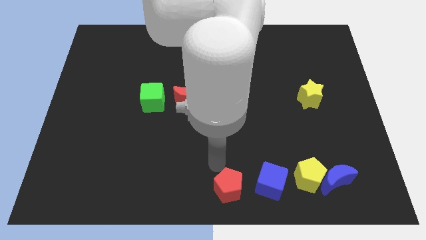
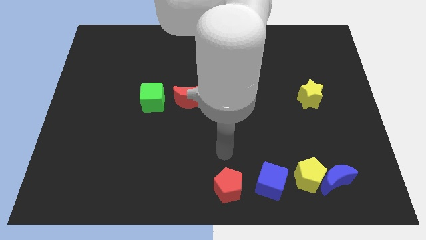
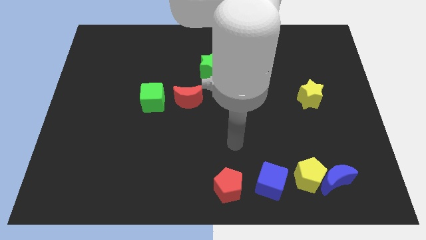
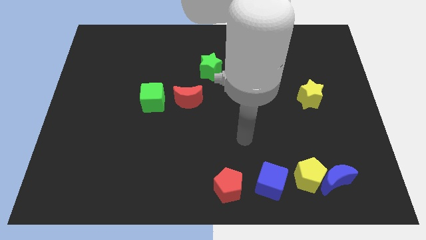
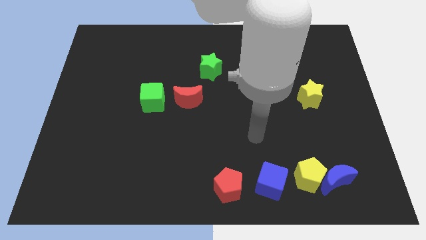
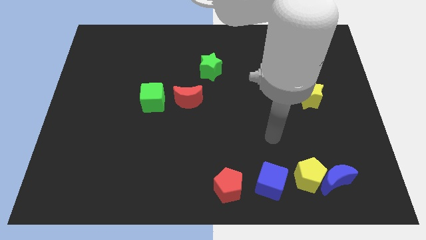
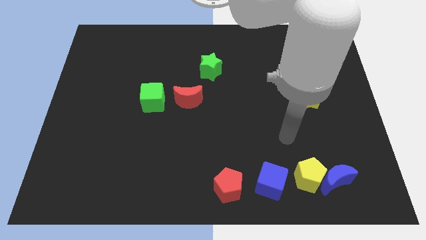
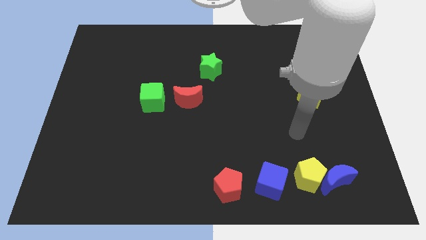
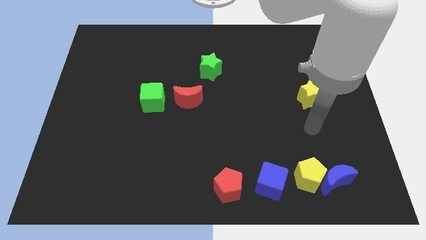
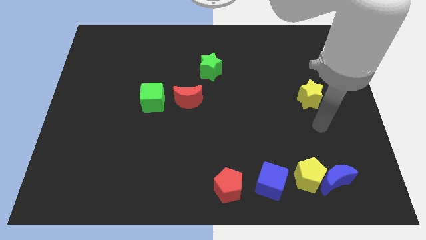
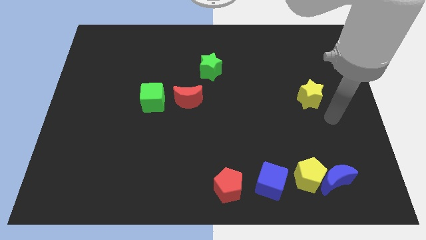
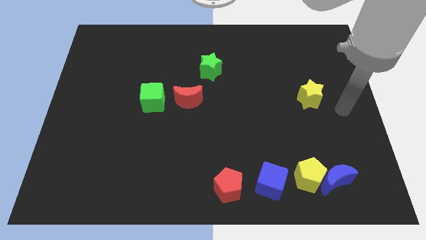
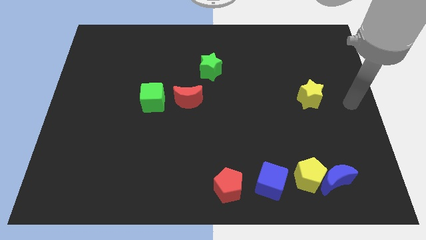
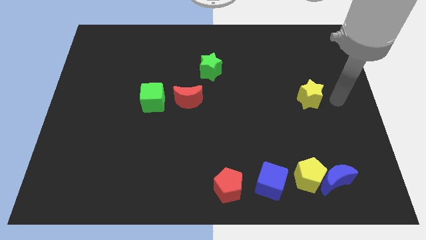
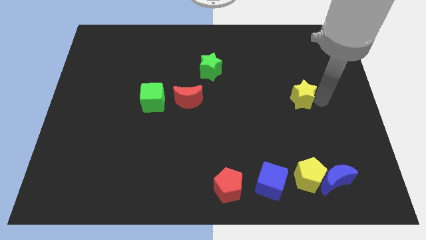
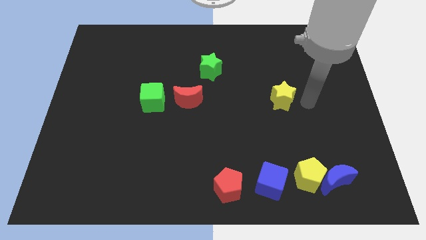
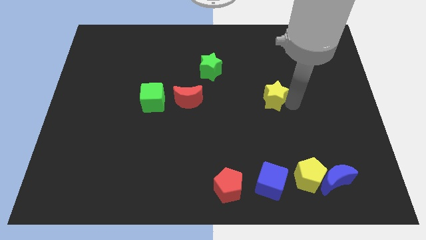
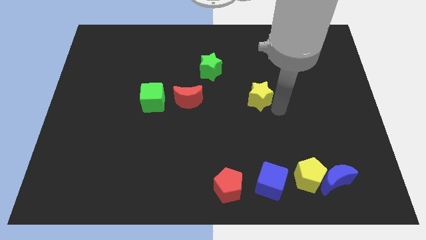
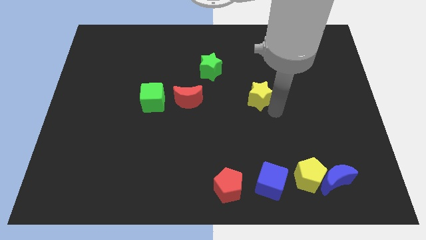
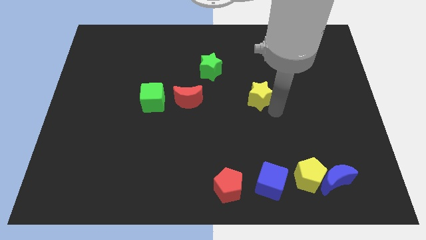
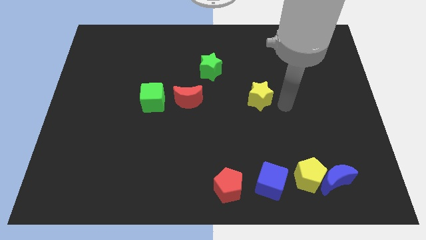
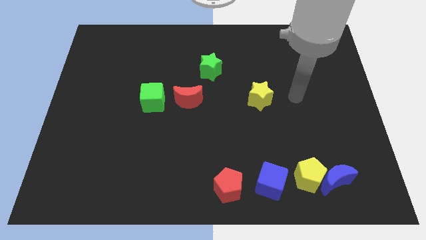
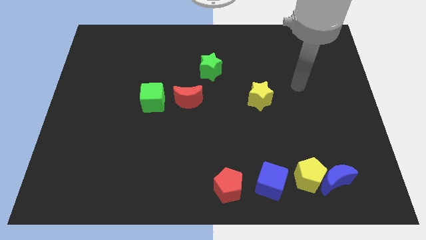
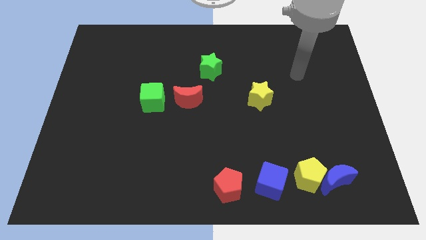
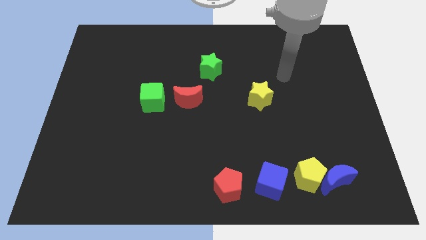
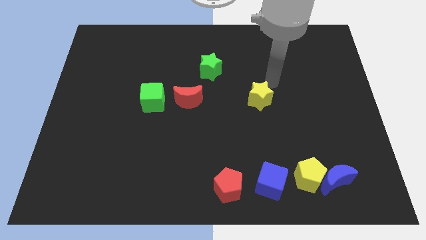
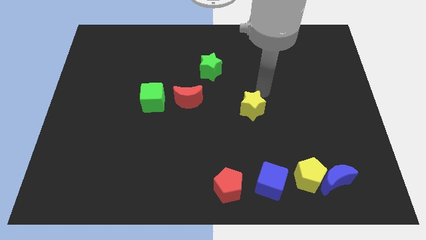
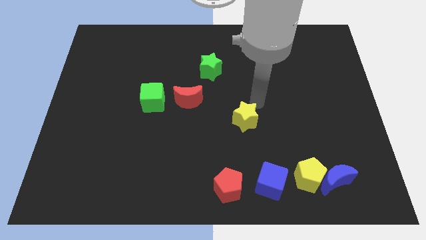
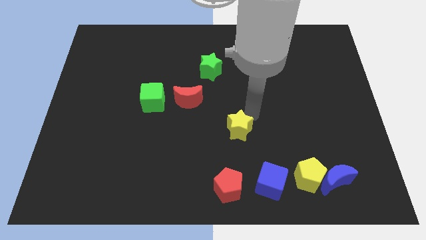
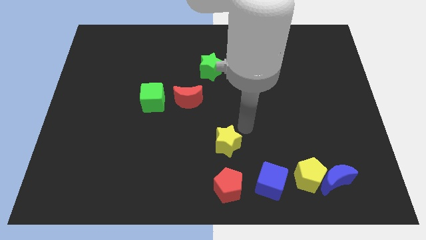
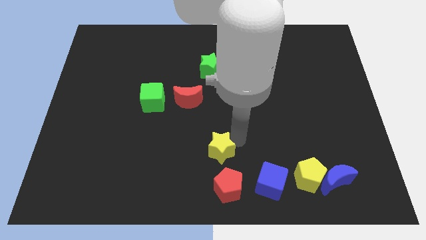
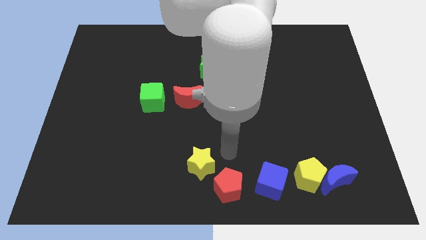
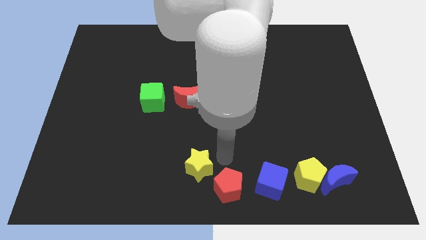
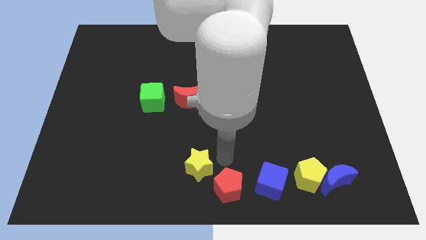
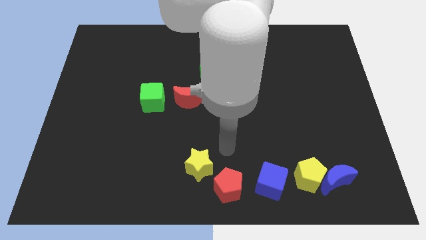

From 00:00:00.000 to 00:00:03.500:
move the yellow star to the top left of the red pentagon

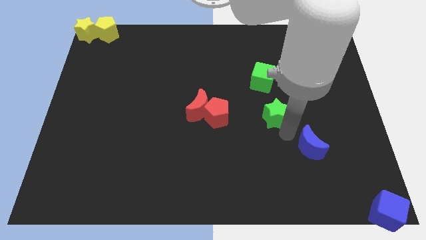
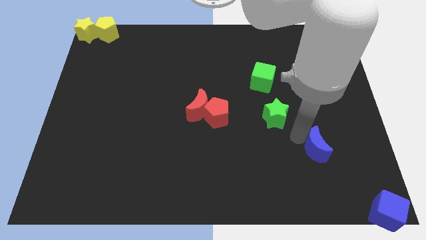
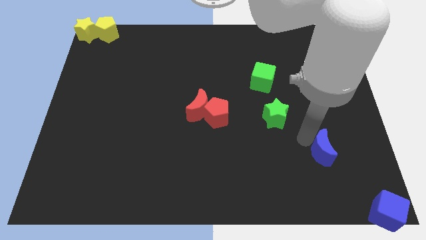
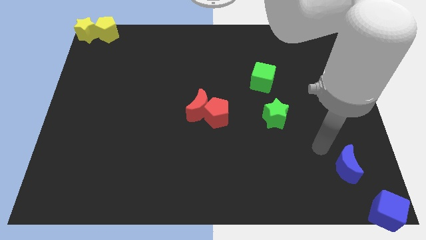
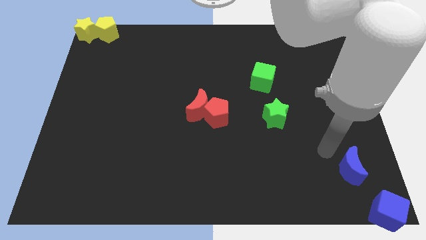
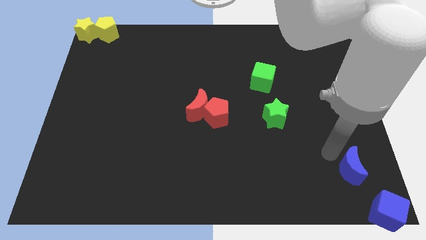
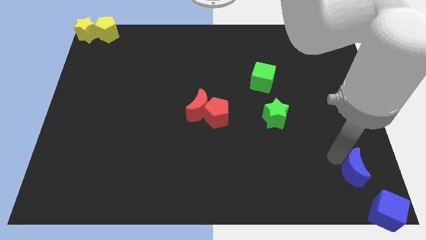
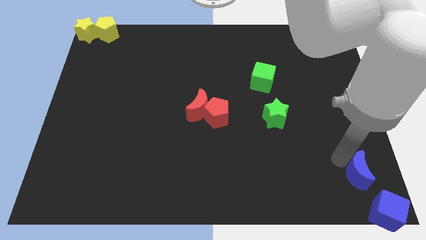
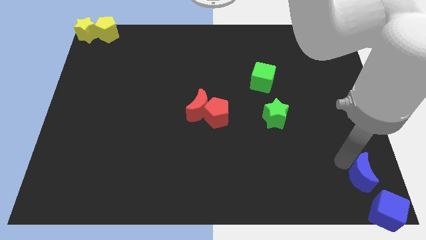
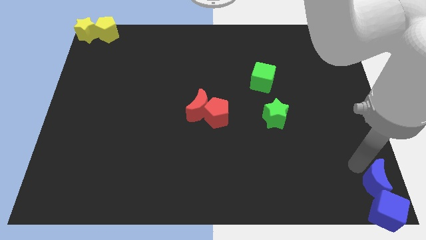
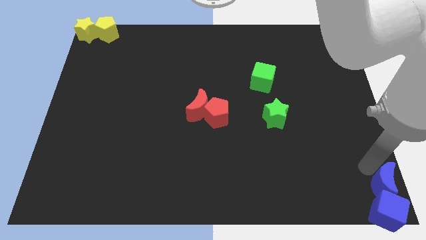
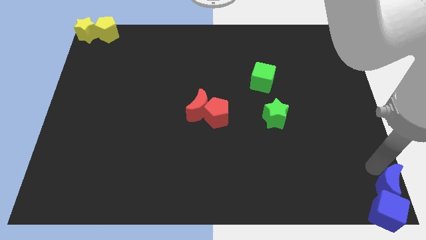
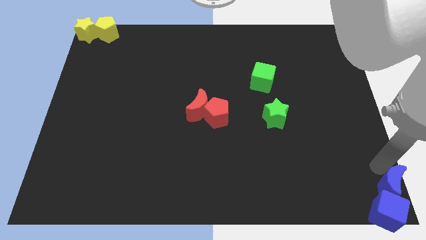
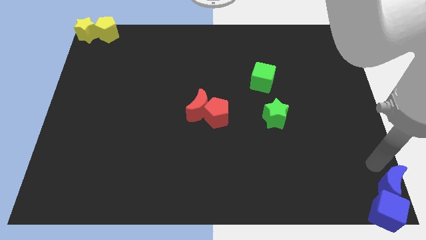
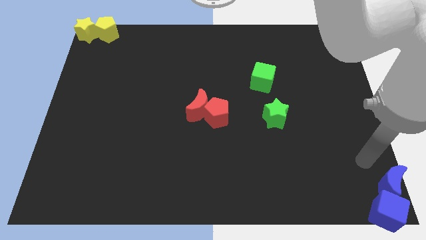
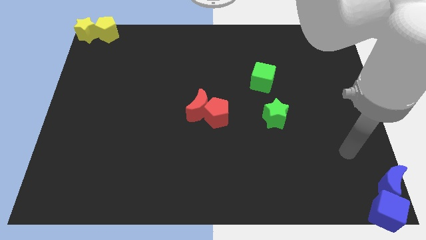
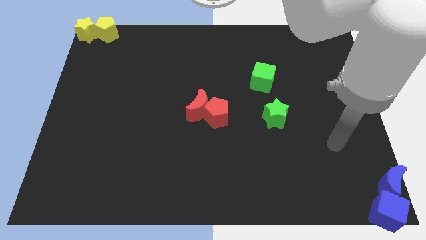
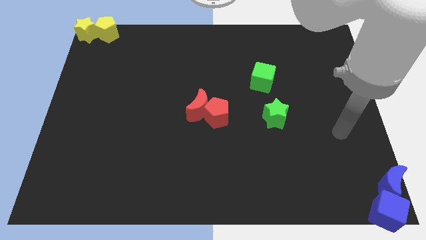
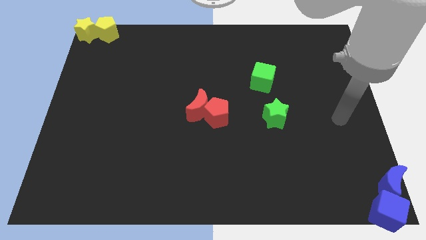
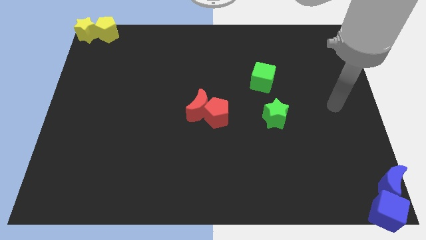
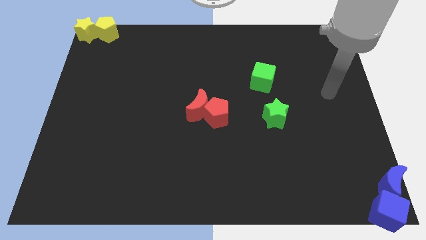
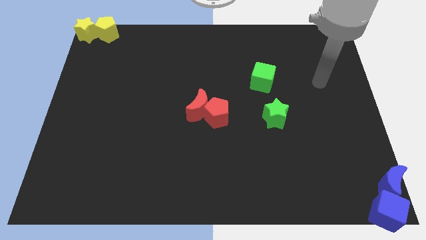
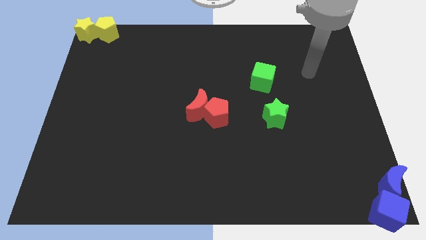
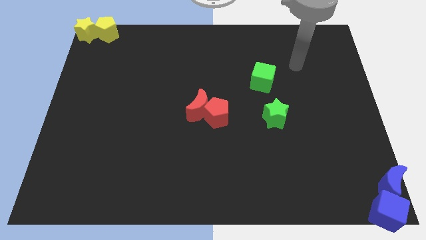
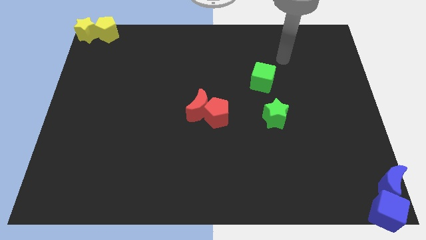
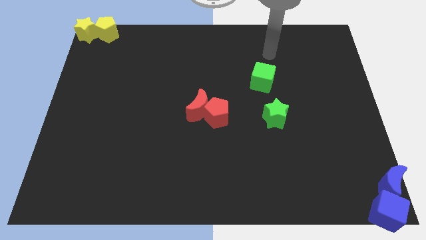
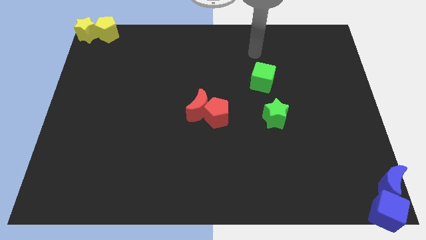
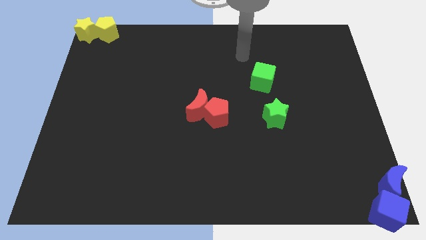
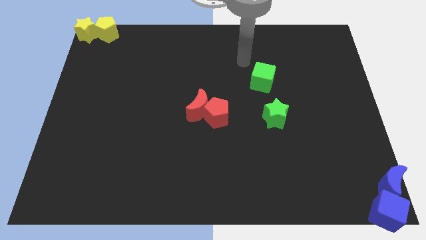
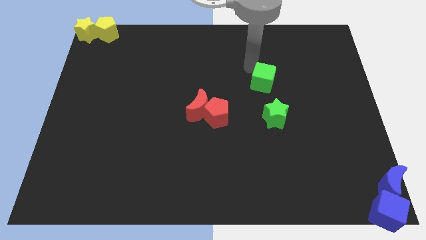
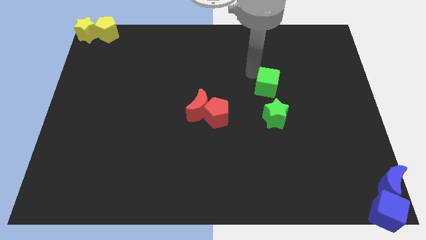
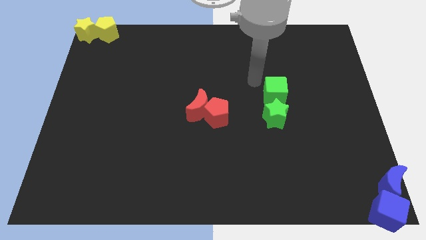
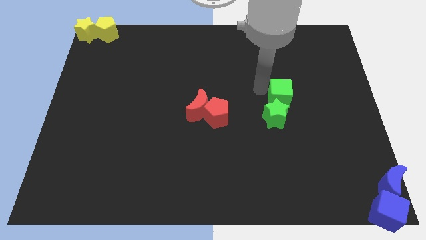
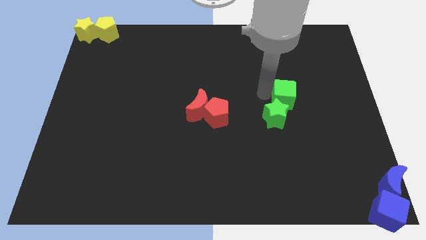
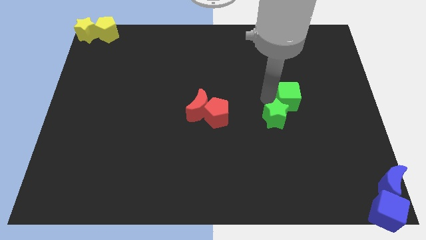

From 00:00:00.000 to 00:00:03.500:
place the blue crescent at the bottom right corner of the board

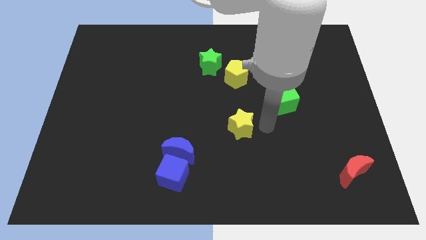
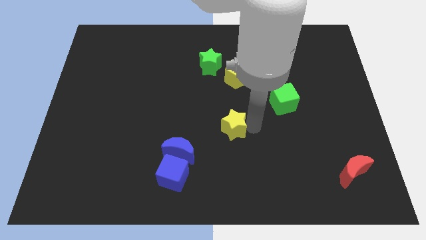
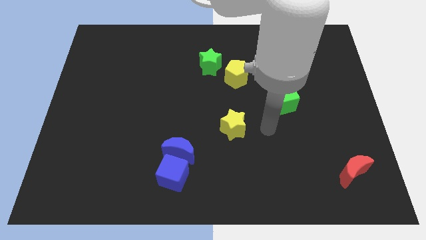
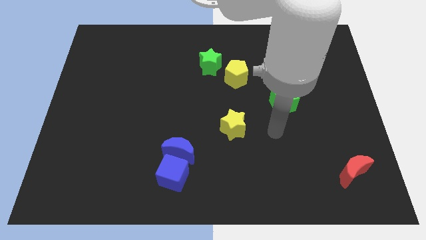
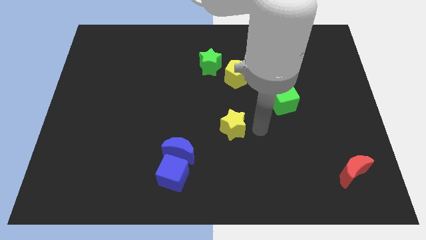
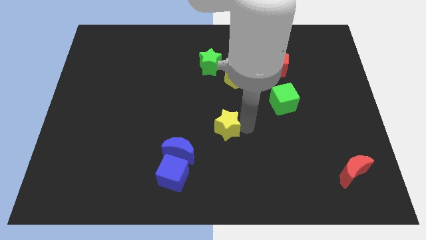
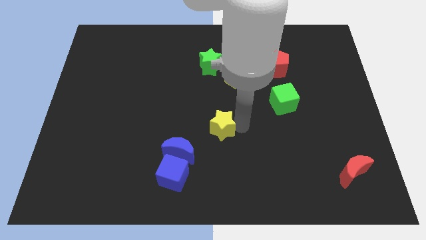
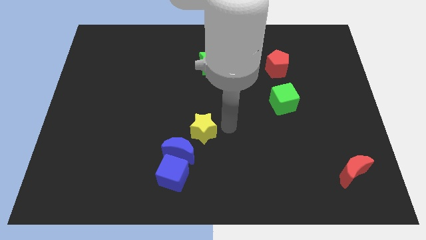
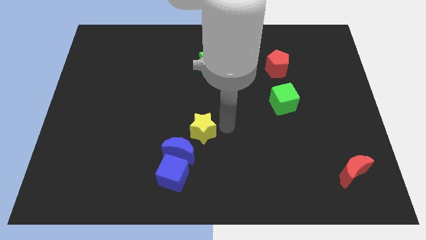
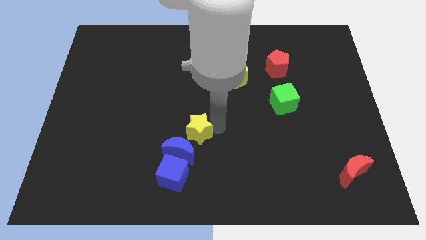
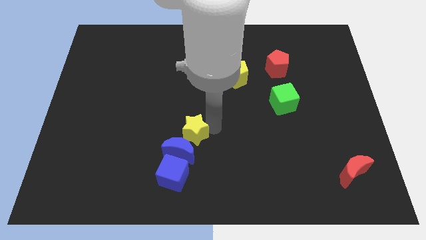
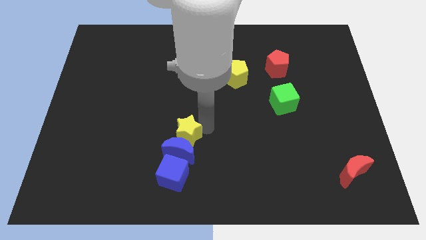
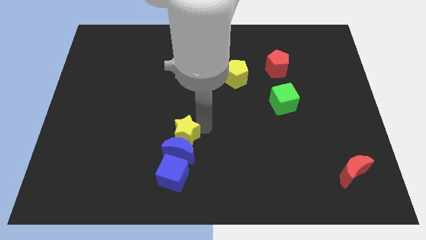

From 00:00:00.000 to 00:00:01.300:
place the yellow star above the blue moon

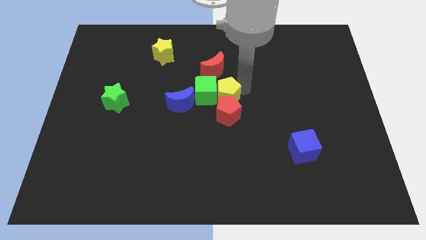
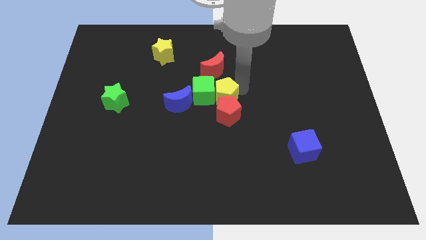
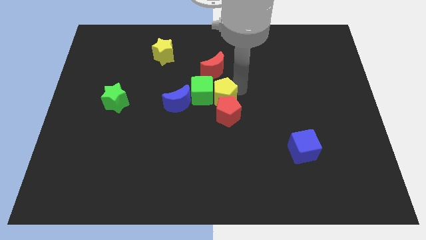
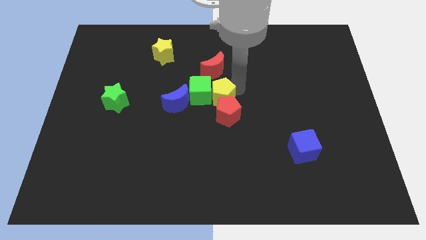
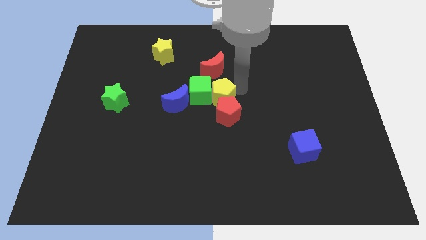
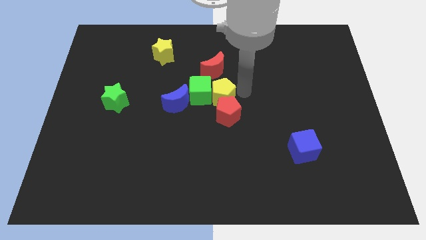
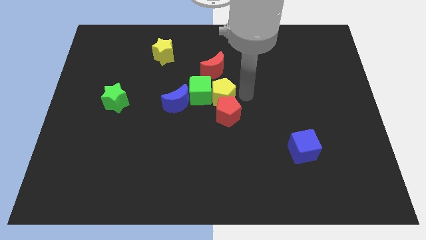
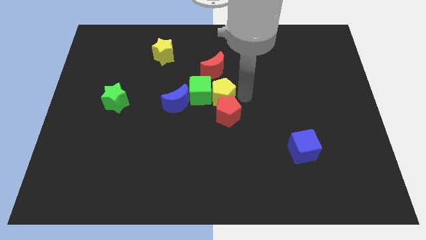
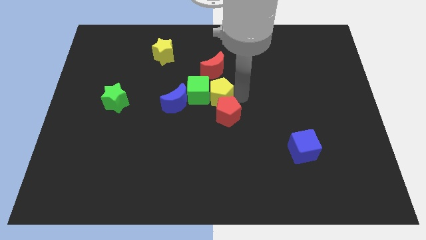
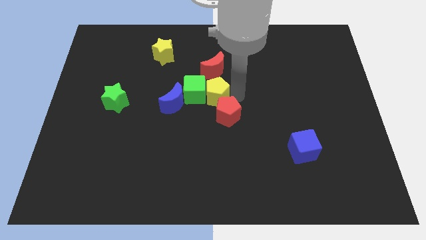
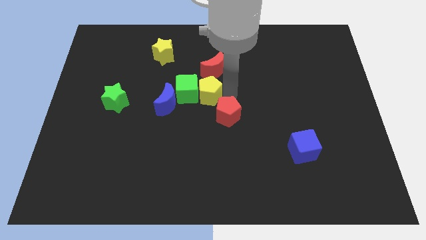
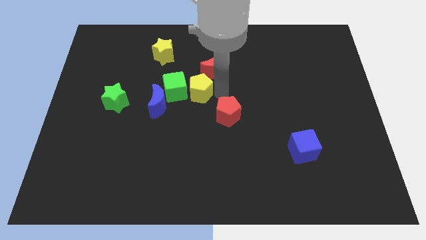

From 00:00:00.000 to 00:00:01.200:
push yellow pentagon in to green cube
